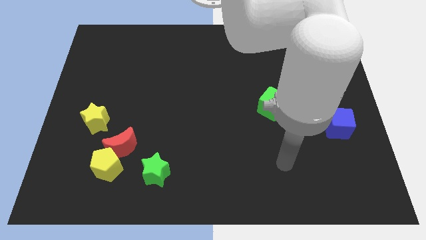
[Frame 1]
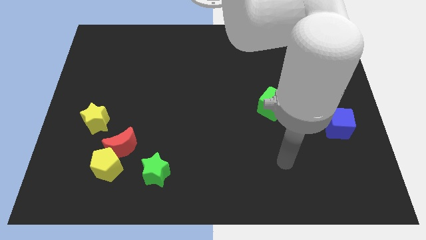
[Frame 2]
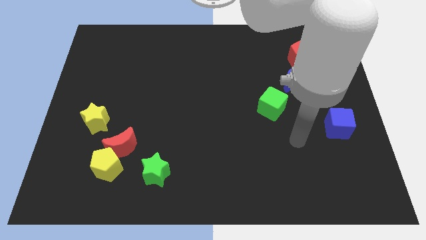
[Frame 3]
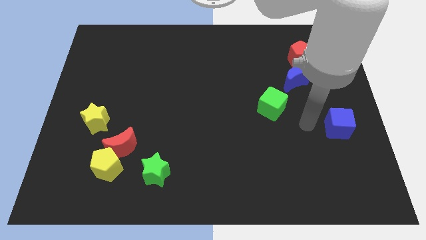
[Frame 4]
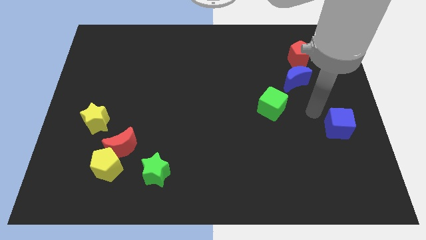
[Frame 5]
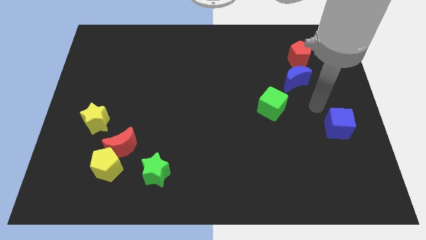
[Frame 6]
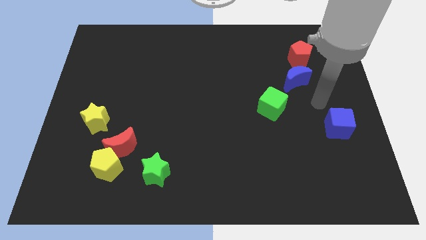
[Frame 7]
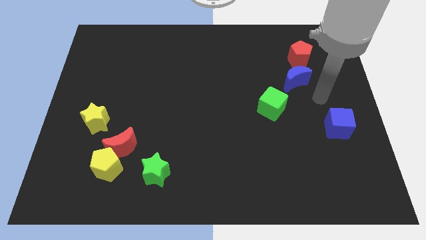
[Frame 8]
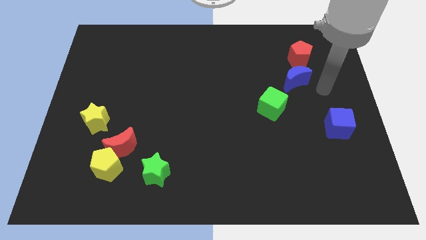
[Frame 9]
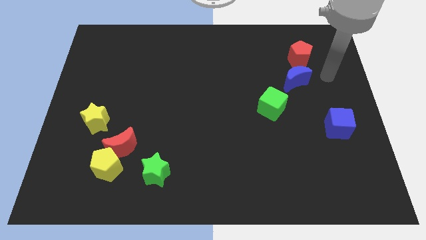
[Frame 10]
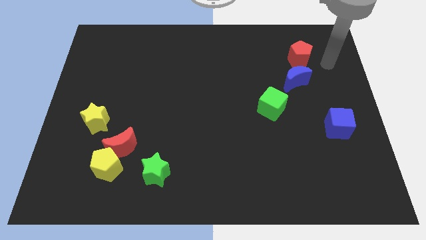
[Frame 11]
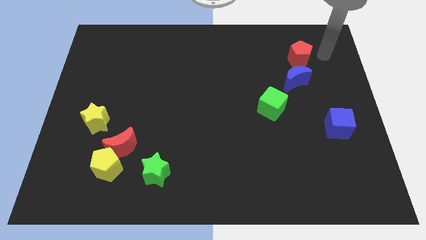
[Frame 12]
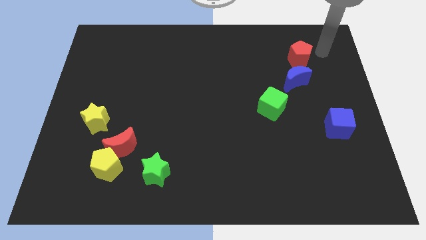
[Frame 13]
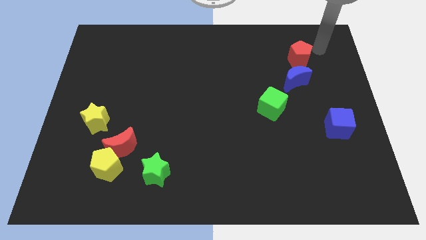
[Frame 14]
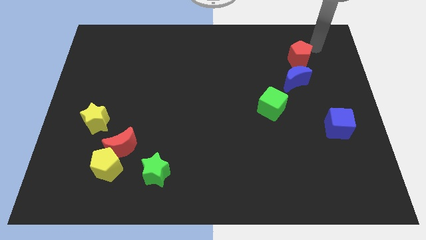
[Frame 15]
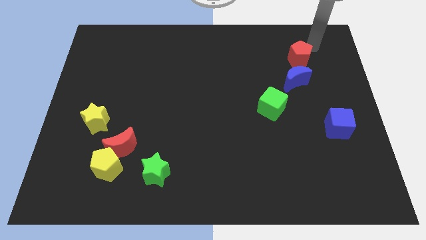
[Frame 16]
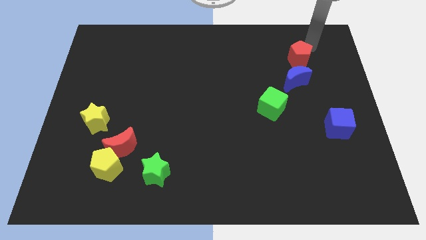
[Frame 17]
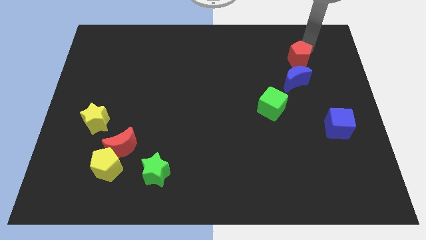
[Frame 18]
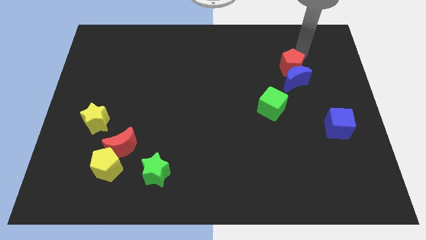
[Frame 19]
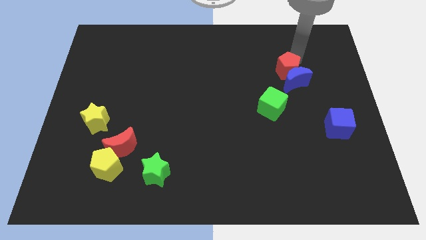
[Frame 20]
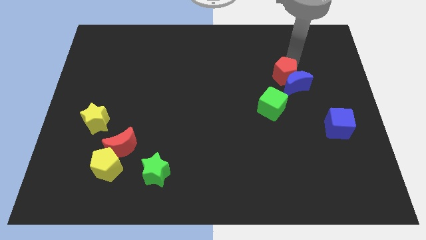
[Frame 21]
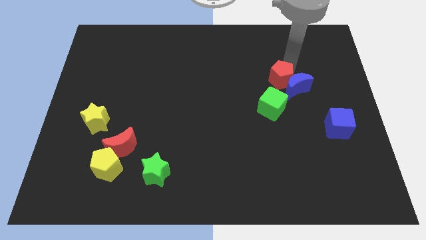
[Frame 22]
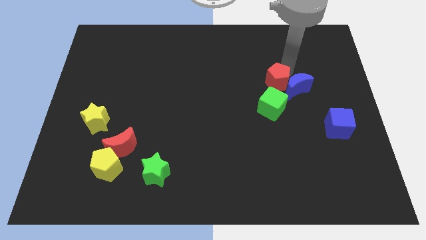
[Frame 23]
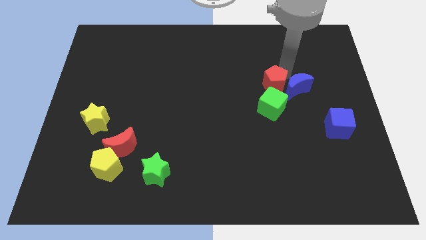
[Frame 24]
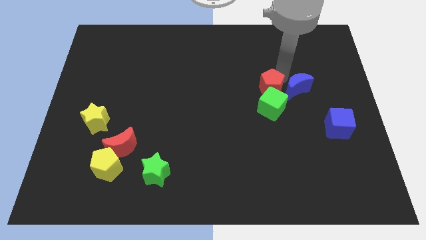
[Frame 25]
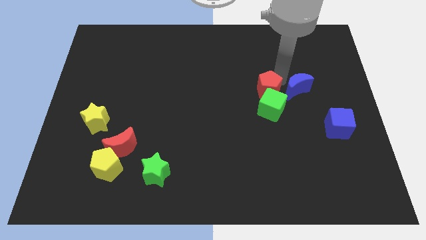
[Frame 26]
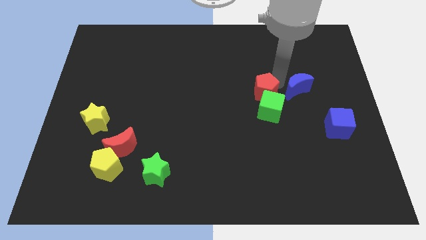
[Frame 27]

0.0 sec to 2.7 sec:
push the red pentagon to the green cube

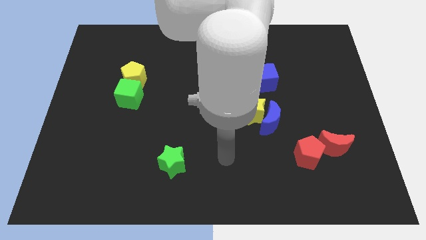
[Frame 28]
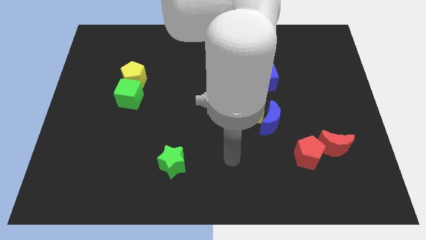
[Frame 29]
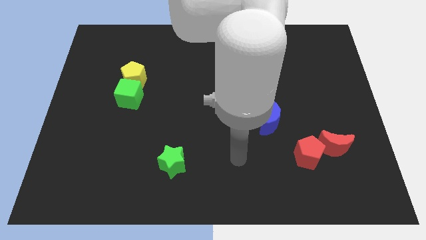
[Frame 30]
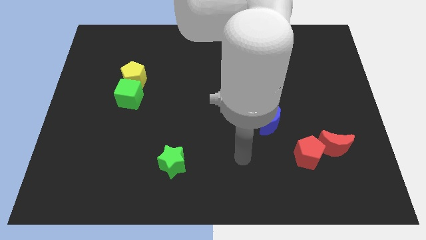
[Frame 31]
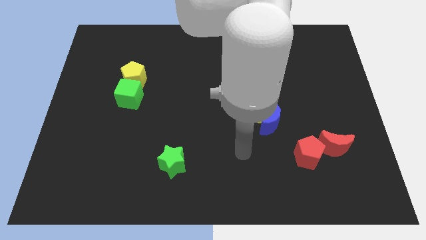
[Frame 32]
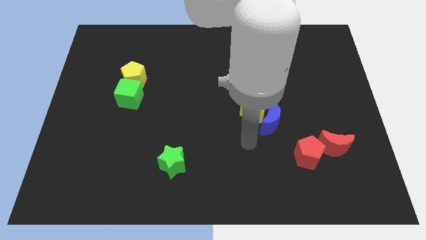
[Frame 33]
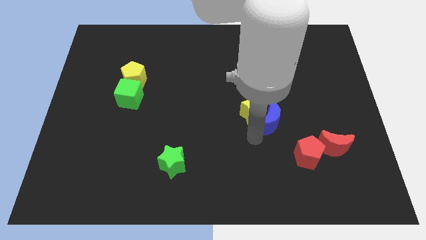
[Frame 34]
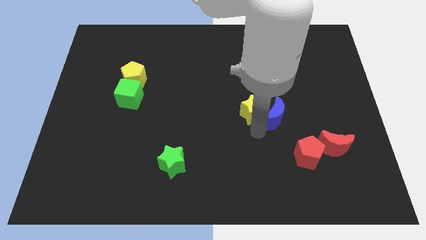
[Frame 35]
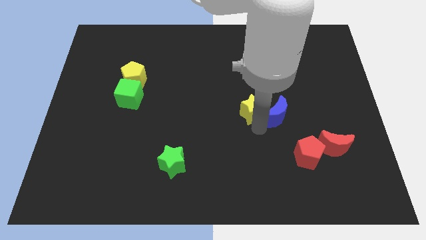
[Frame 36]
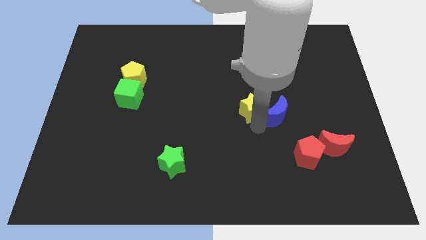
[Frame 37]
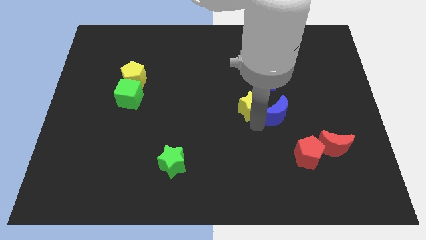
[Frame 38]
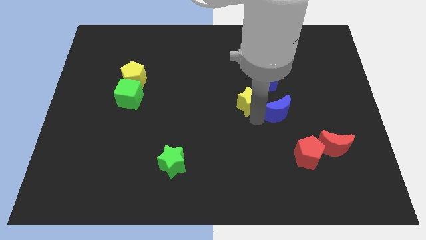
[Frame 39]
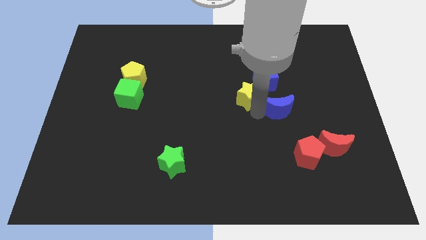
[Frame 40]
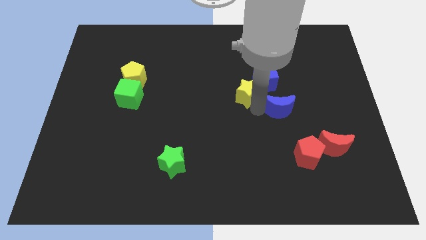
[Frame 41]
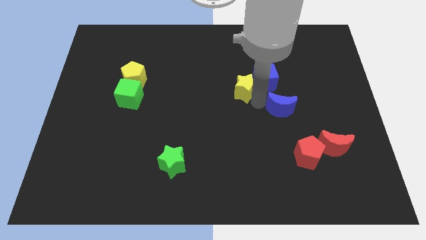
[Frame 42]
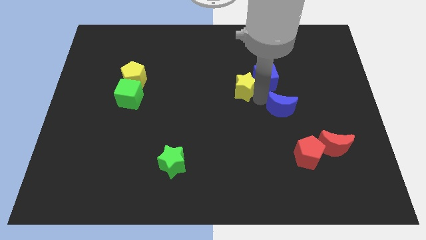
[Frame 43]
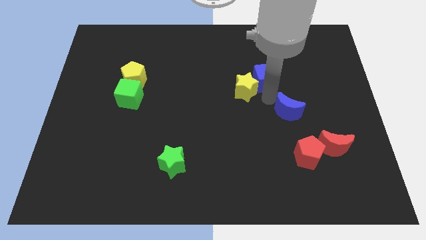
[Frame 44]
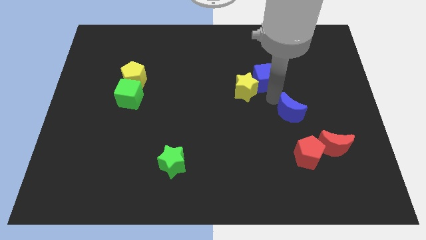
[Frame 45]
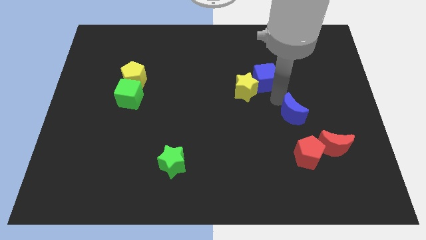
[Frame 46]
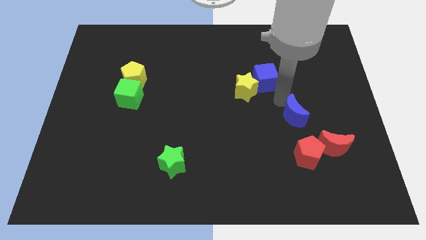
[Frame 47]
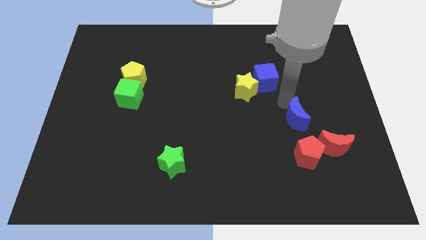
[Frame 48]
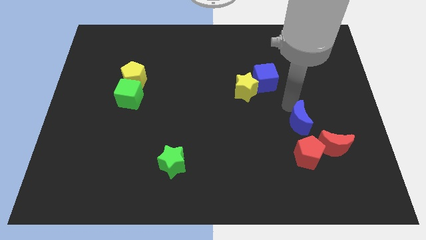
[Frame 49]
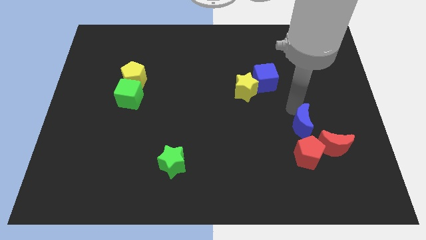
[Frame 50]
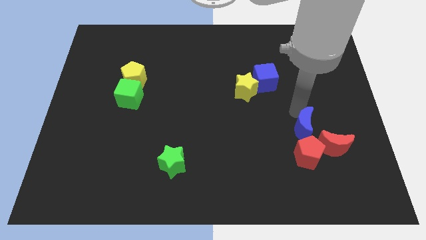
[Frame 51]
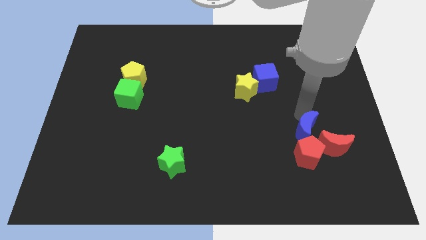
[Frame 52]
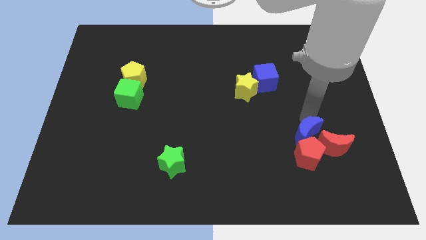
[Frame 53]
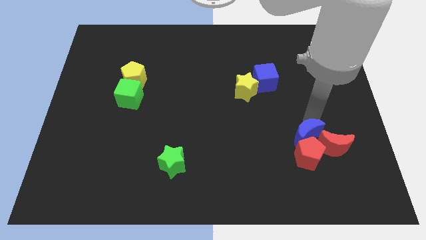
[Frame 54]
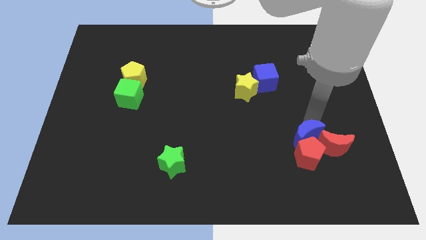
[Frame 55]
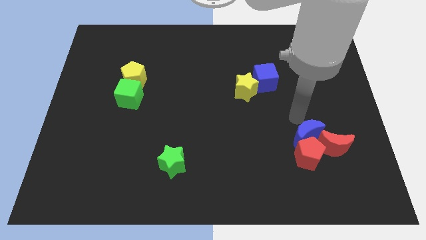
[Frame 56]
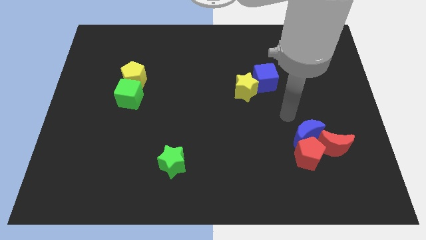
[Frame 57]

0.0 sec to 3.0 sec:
move the blue moon close to the red moon

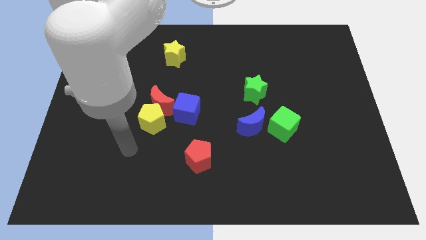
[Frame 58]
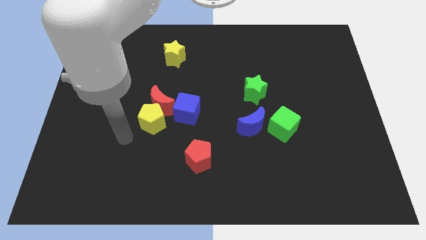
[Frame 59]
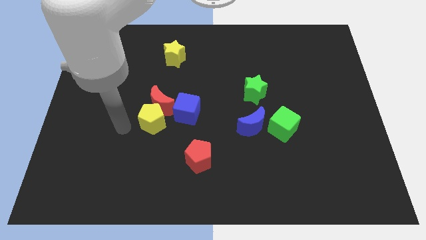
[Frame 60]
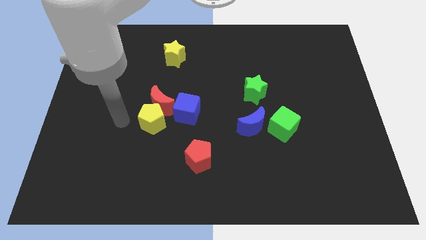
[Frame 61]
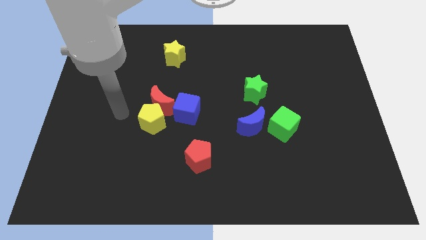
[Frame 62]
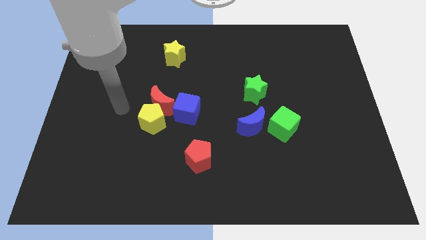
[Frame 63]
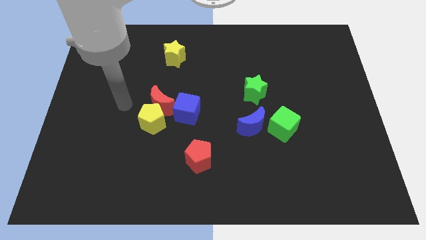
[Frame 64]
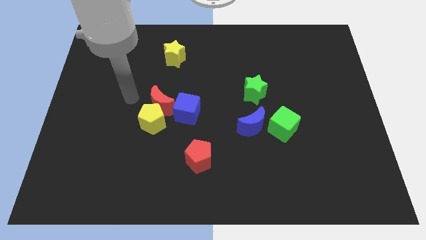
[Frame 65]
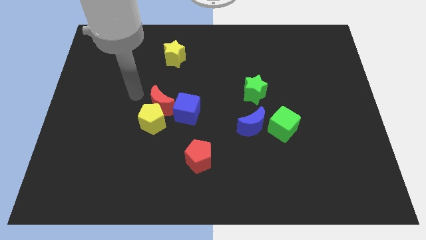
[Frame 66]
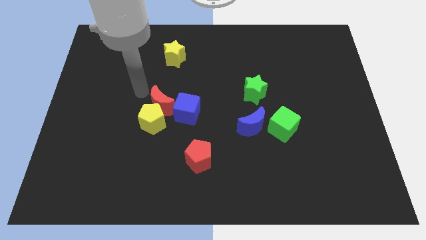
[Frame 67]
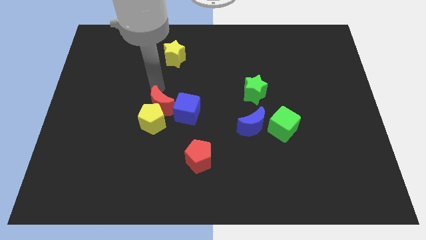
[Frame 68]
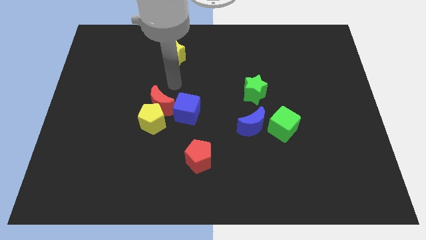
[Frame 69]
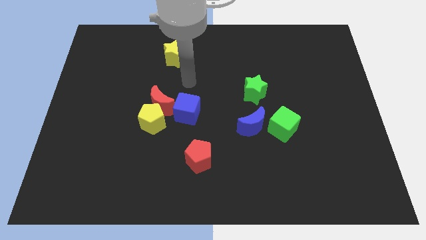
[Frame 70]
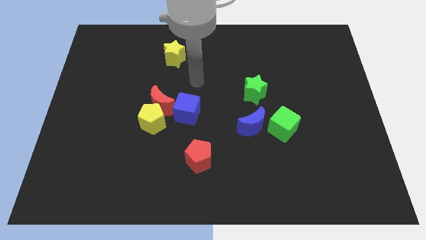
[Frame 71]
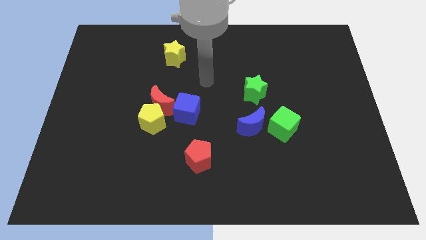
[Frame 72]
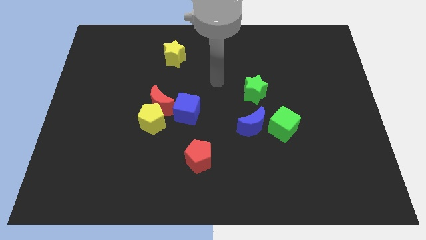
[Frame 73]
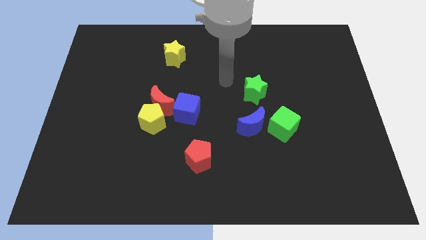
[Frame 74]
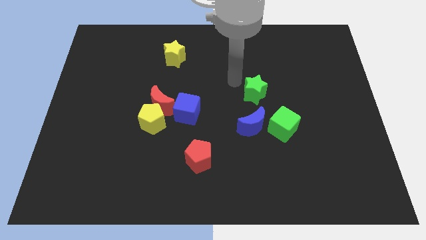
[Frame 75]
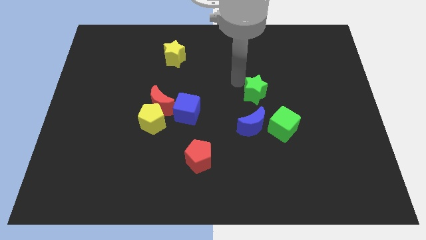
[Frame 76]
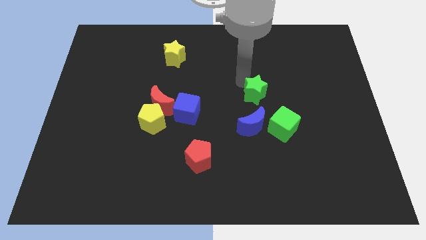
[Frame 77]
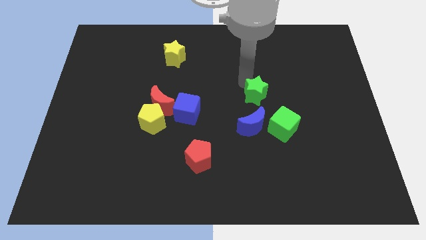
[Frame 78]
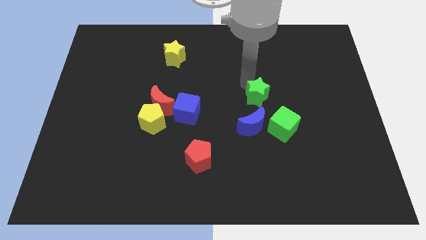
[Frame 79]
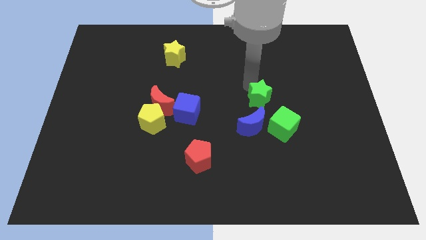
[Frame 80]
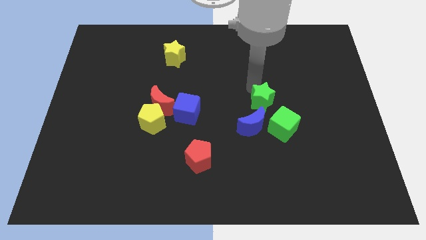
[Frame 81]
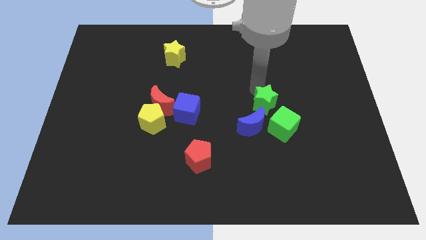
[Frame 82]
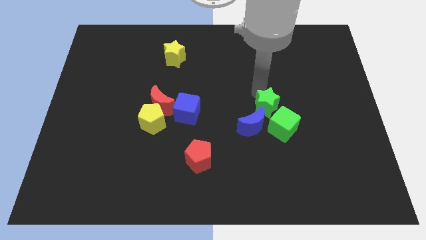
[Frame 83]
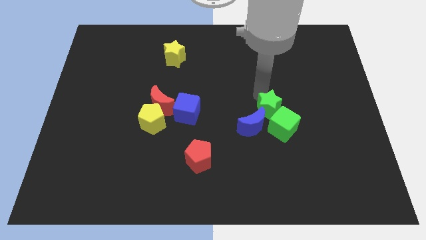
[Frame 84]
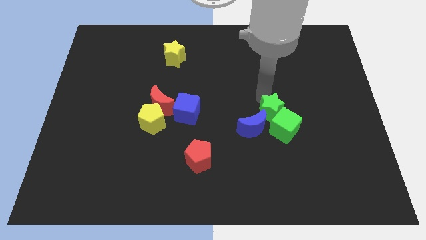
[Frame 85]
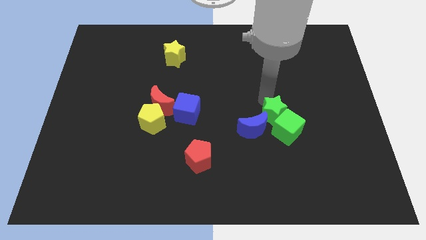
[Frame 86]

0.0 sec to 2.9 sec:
put the green star next to the green cube
